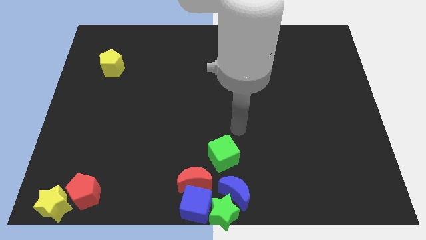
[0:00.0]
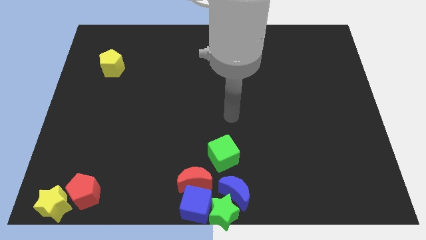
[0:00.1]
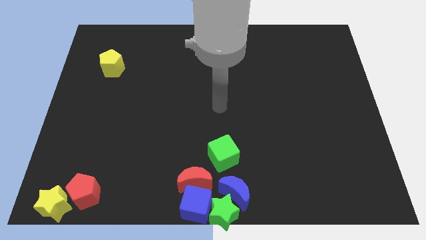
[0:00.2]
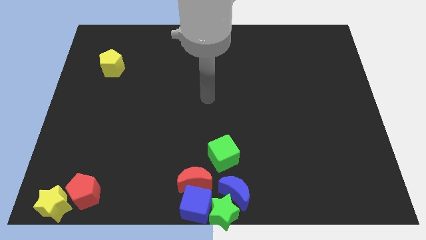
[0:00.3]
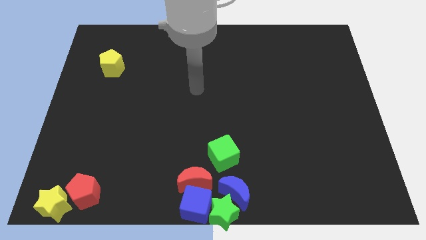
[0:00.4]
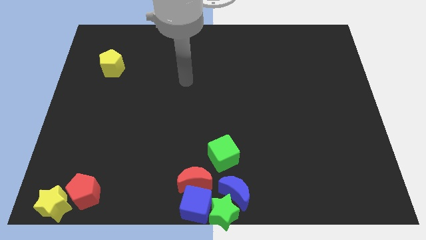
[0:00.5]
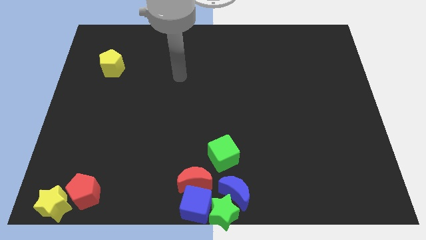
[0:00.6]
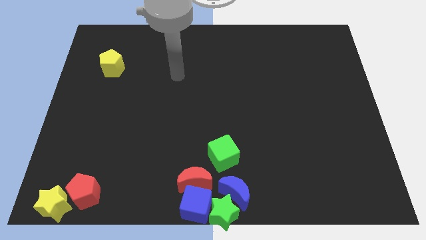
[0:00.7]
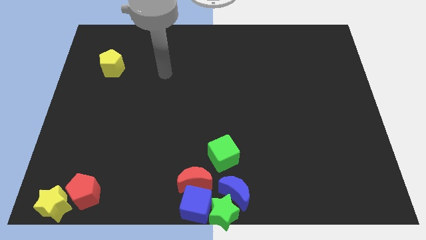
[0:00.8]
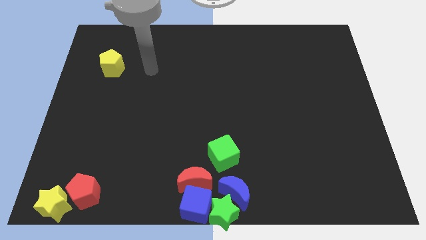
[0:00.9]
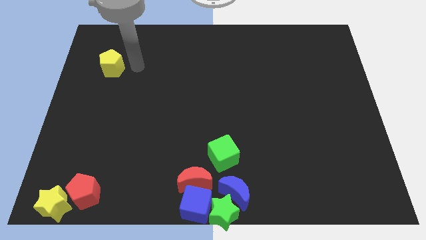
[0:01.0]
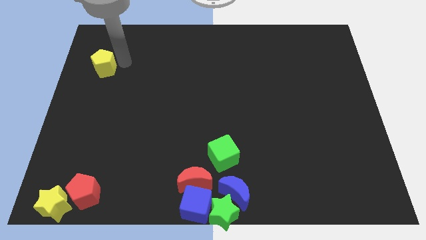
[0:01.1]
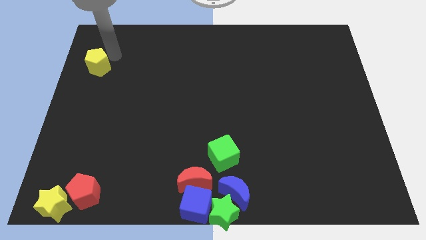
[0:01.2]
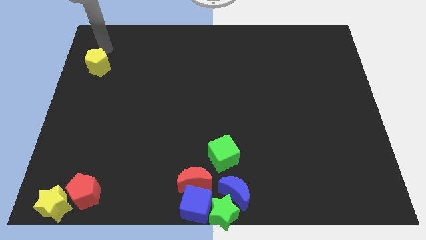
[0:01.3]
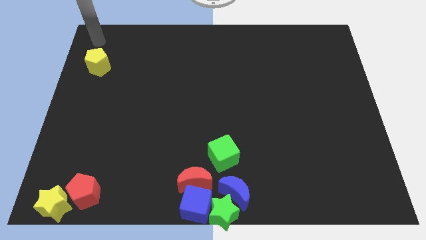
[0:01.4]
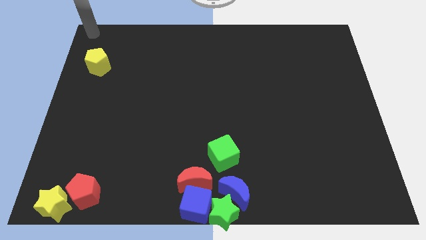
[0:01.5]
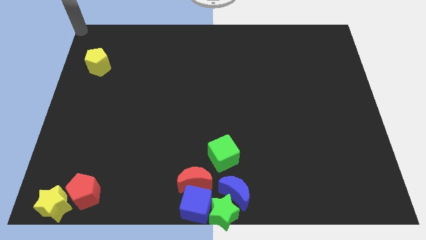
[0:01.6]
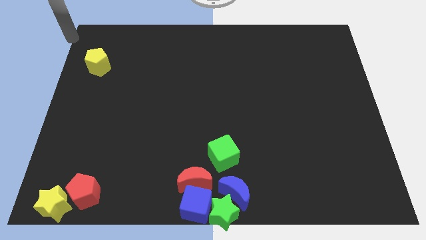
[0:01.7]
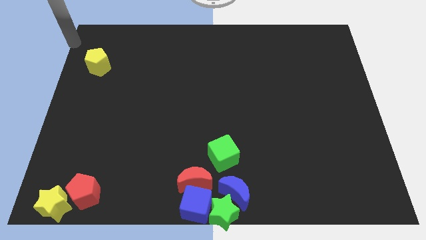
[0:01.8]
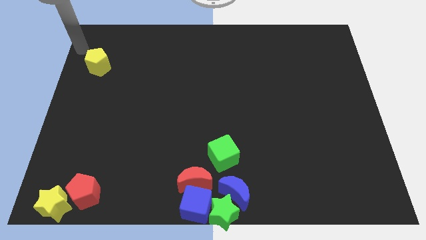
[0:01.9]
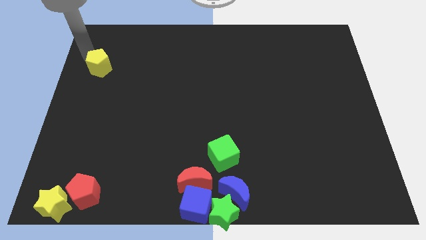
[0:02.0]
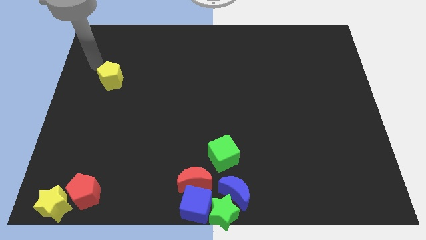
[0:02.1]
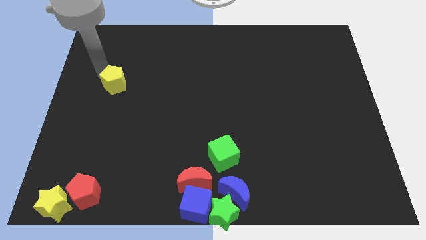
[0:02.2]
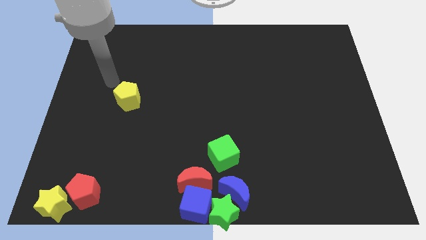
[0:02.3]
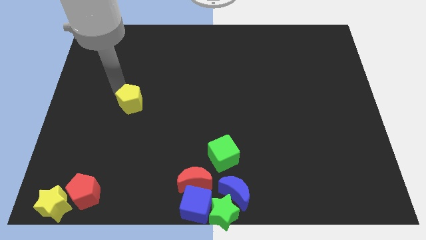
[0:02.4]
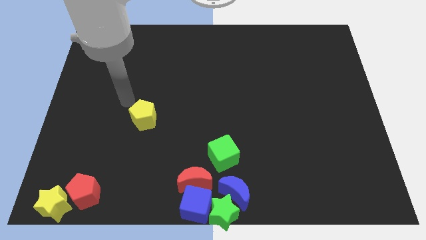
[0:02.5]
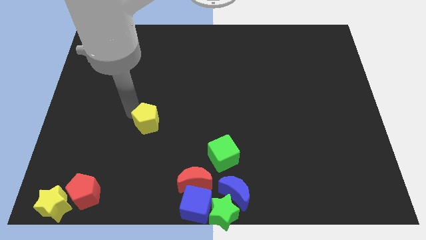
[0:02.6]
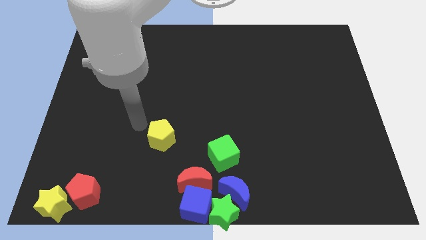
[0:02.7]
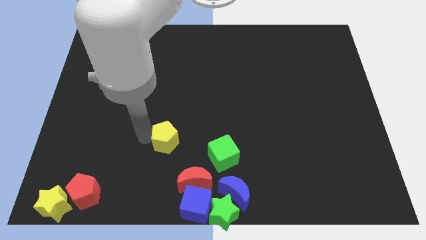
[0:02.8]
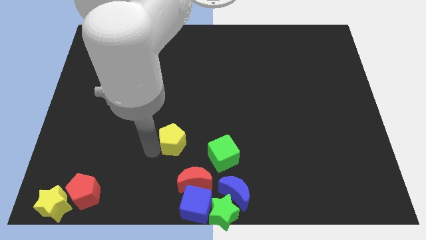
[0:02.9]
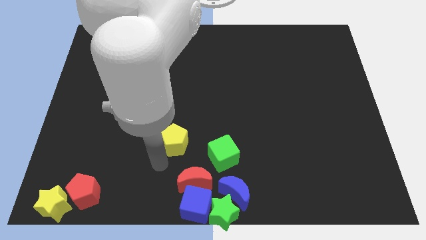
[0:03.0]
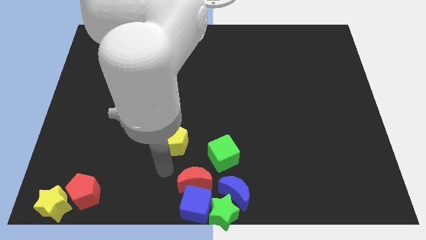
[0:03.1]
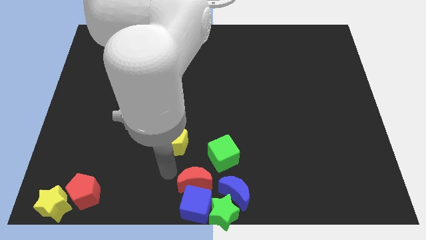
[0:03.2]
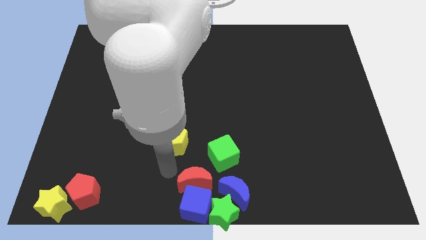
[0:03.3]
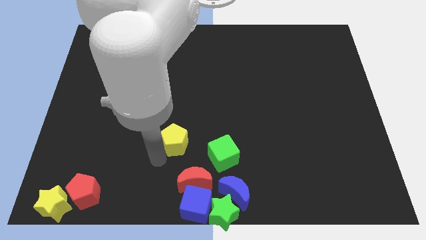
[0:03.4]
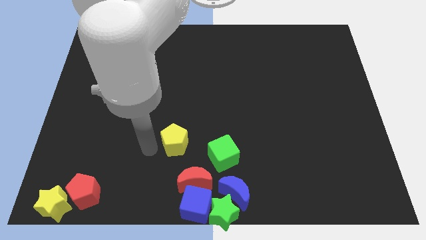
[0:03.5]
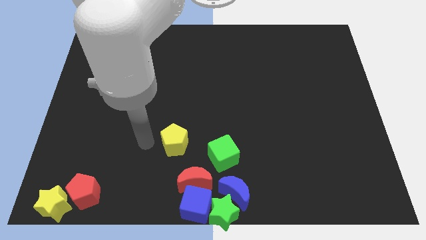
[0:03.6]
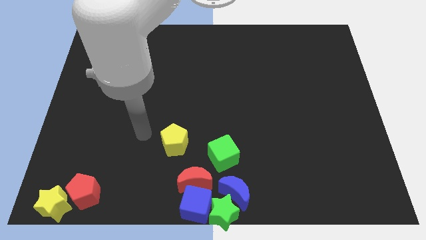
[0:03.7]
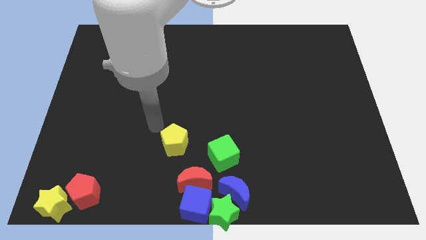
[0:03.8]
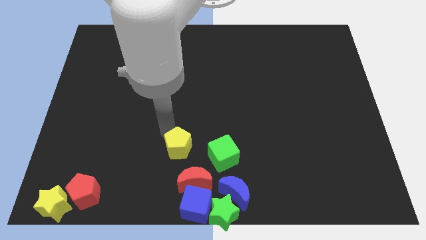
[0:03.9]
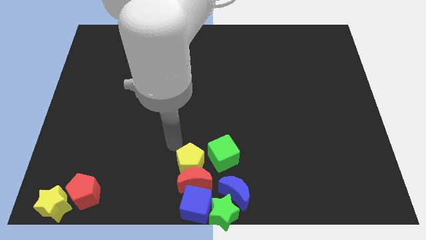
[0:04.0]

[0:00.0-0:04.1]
move the yellow pentagon to the left of the green cube

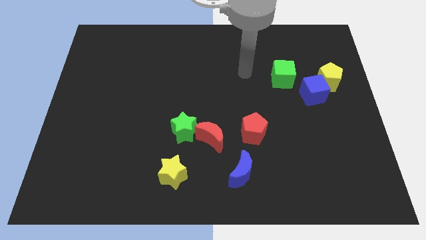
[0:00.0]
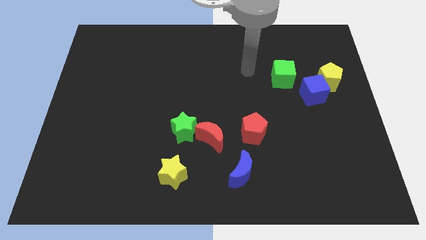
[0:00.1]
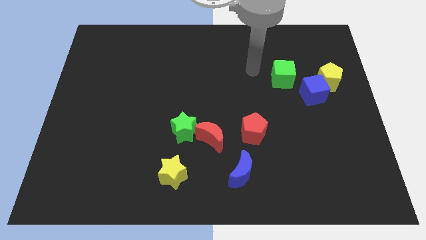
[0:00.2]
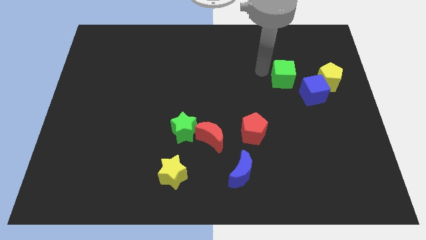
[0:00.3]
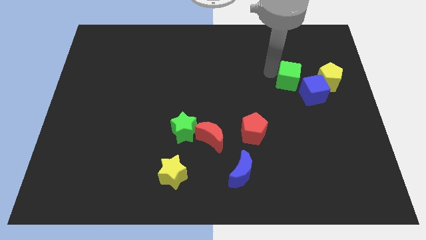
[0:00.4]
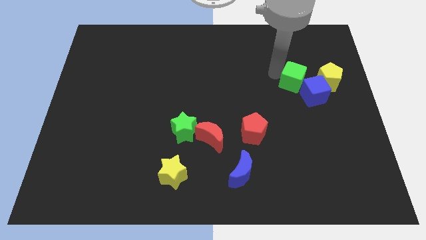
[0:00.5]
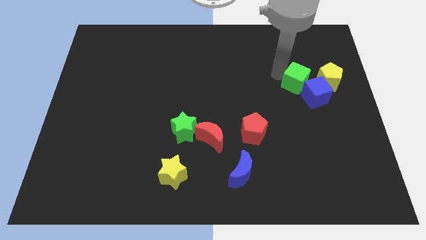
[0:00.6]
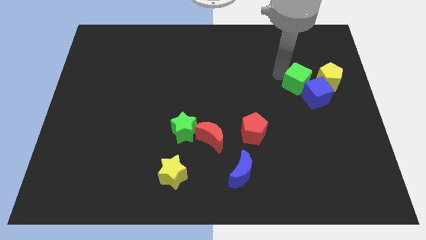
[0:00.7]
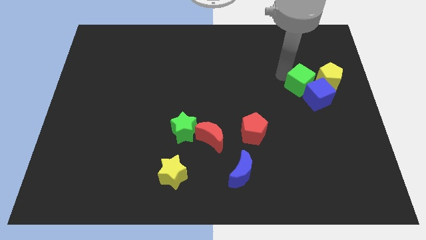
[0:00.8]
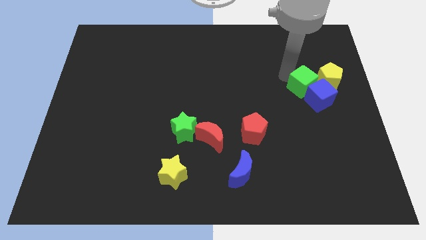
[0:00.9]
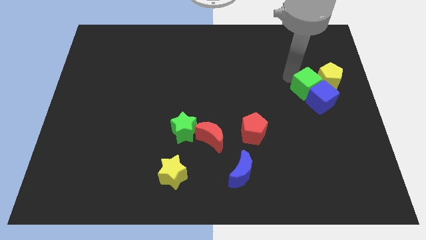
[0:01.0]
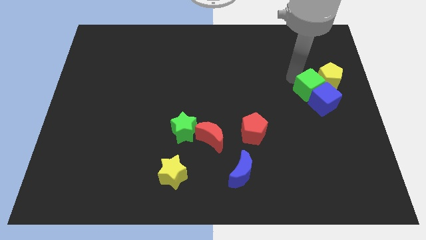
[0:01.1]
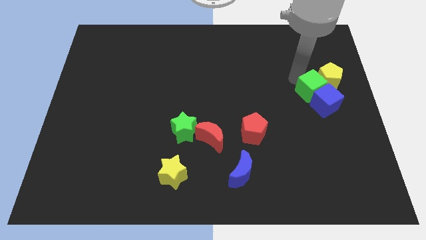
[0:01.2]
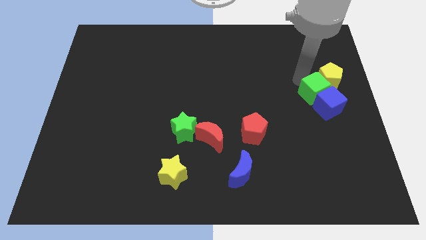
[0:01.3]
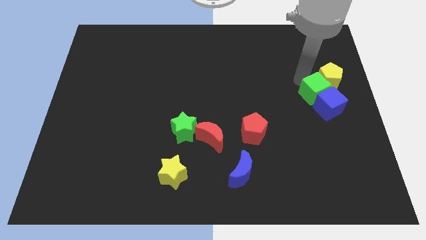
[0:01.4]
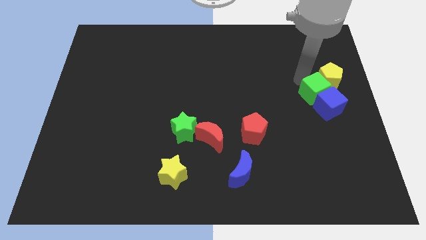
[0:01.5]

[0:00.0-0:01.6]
push the green cube into the blue cube at the bottom left of the yellow pentagon

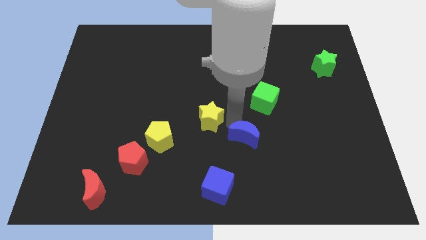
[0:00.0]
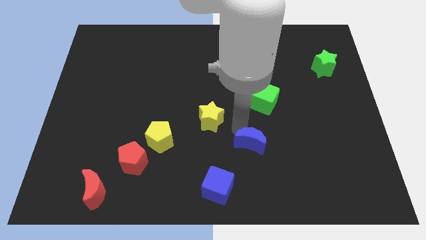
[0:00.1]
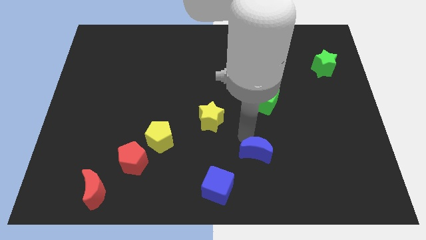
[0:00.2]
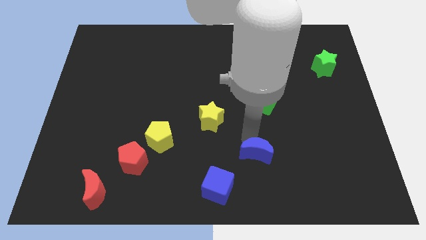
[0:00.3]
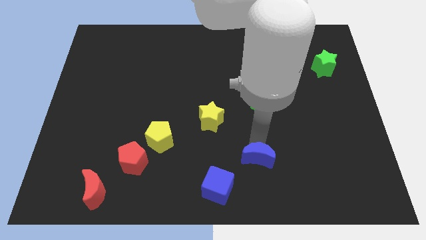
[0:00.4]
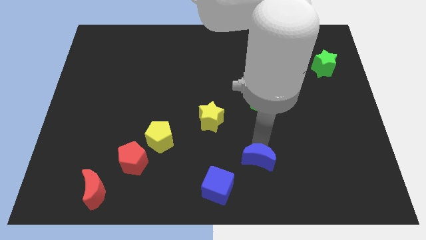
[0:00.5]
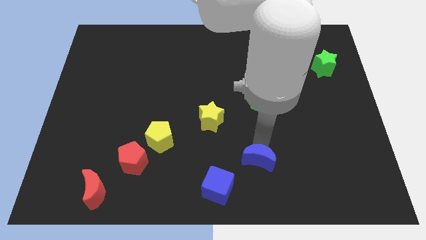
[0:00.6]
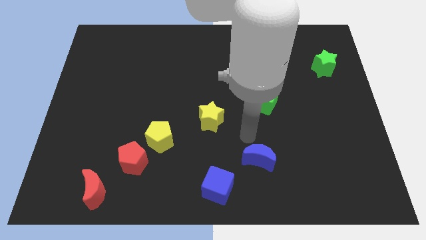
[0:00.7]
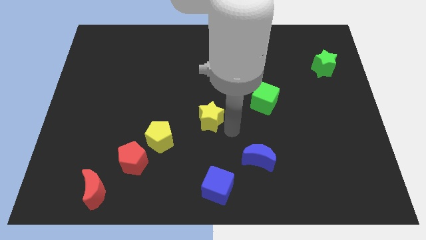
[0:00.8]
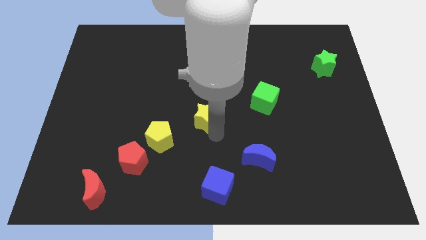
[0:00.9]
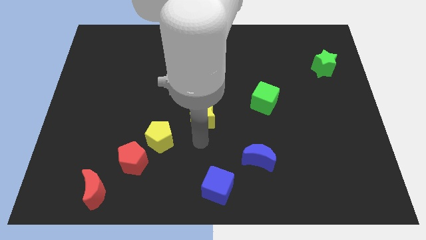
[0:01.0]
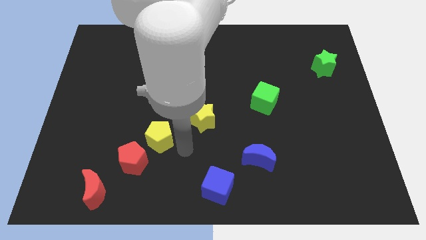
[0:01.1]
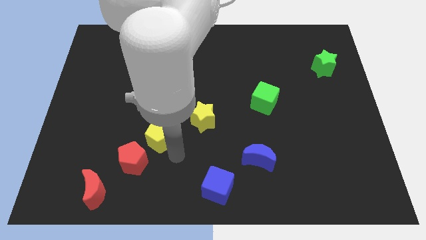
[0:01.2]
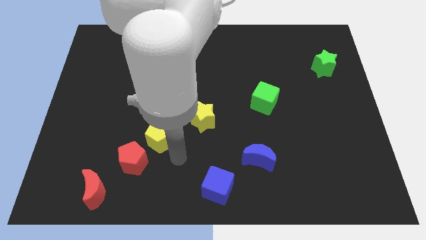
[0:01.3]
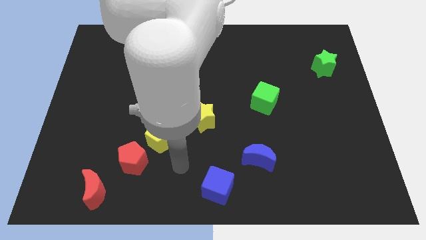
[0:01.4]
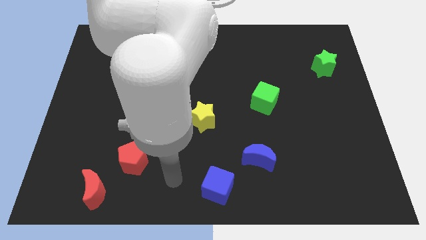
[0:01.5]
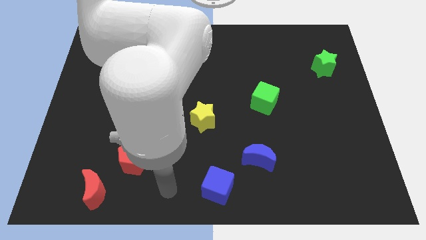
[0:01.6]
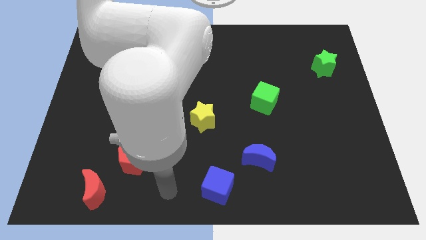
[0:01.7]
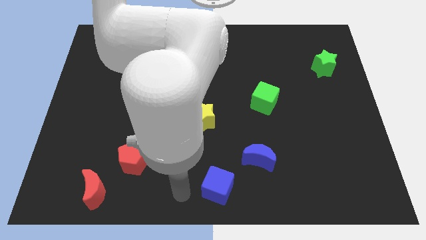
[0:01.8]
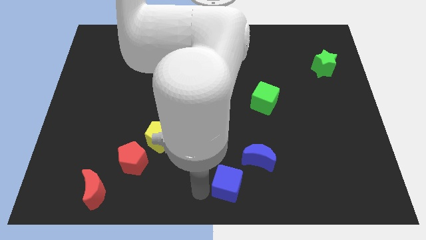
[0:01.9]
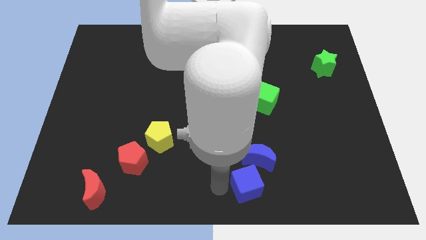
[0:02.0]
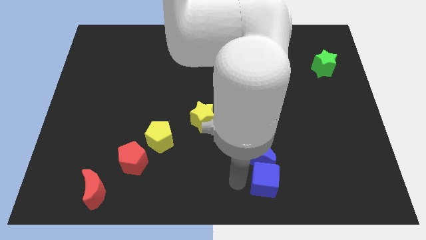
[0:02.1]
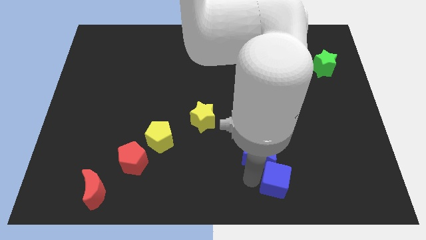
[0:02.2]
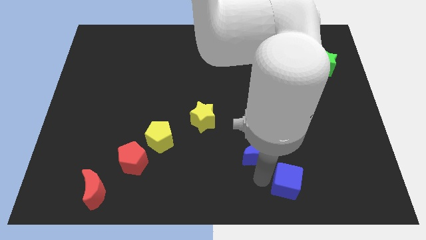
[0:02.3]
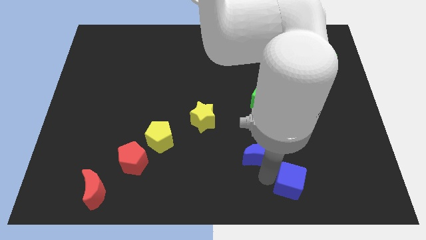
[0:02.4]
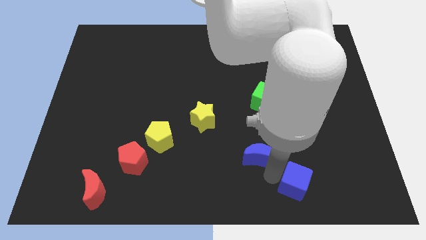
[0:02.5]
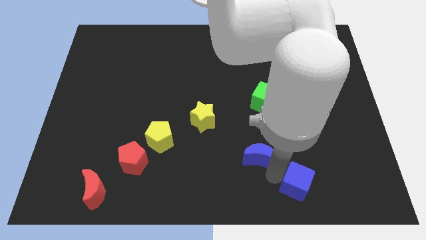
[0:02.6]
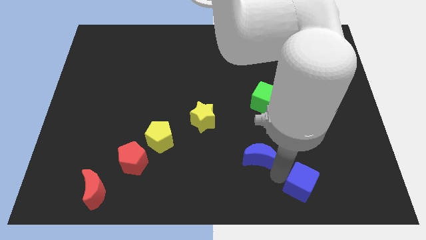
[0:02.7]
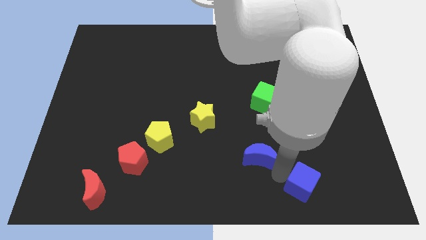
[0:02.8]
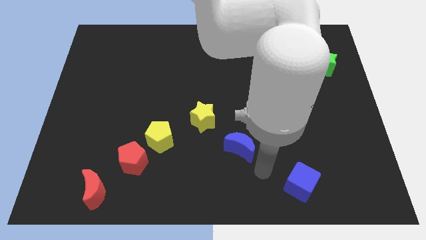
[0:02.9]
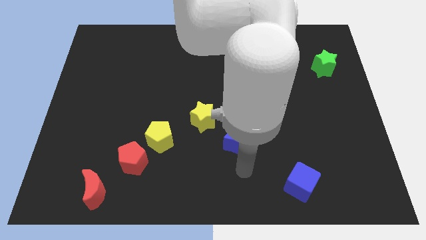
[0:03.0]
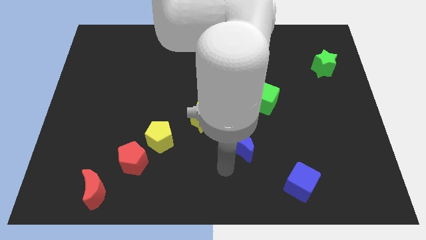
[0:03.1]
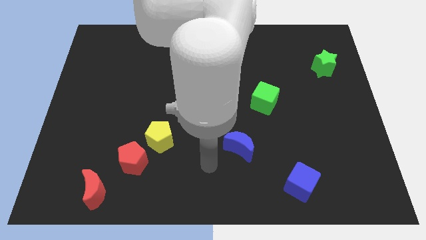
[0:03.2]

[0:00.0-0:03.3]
place the blue cube diagonal to the blue moon
